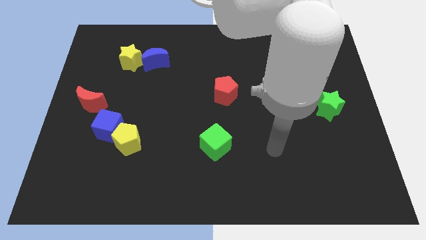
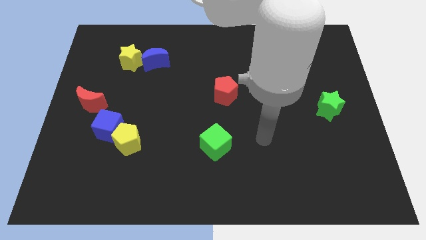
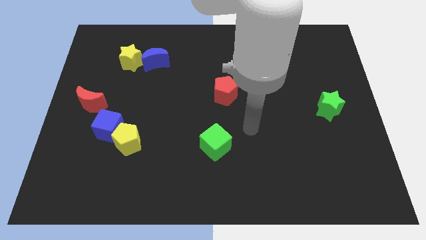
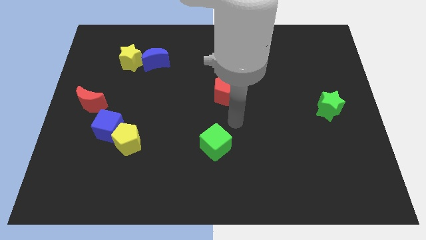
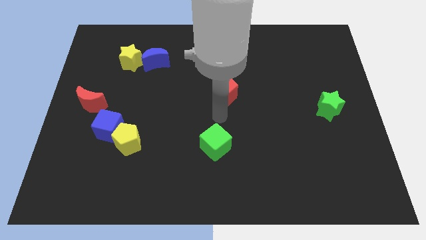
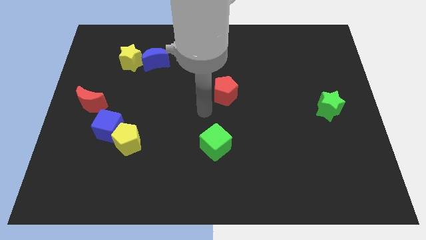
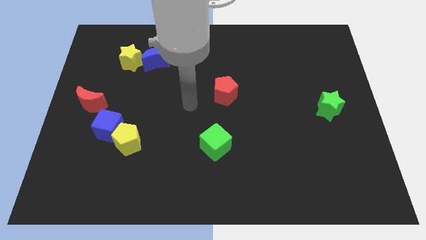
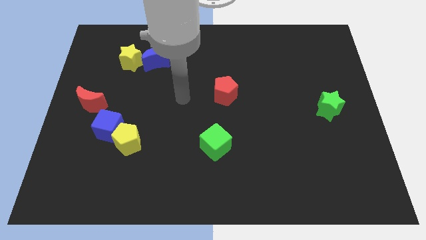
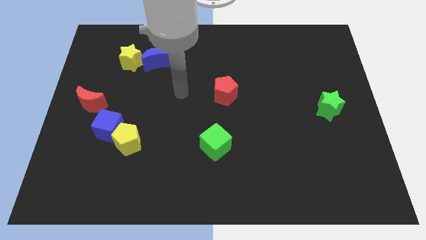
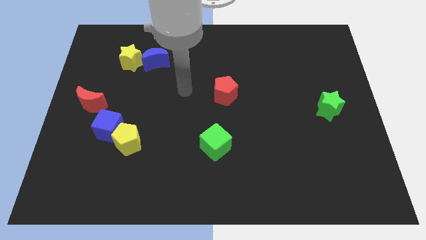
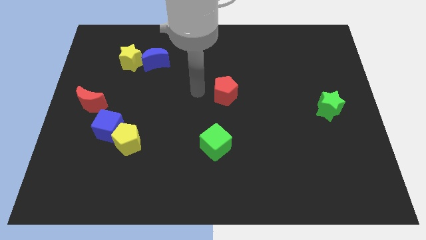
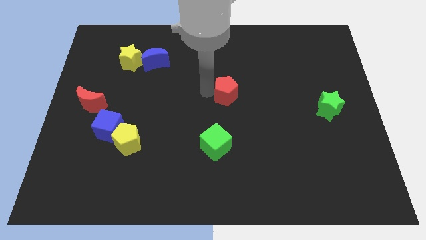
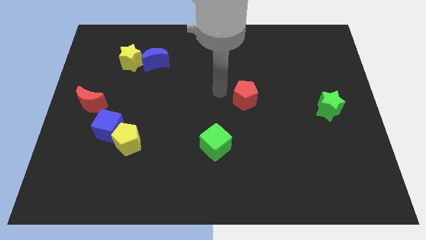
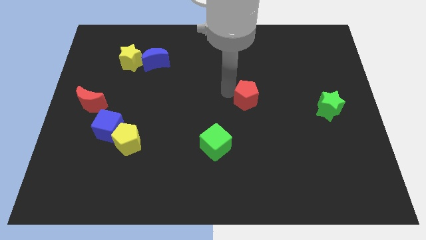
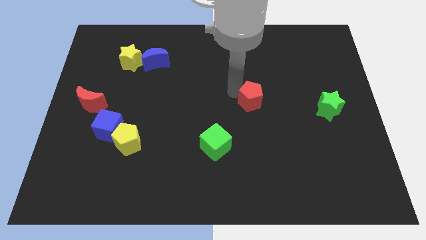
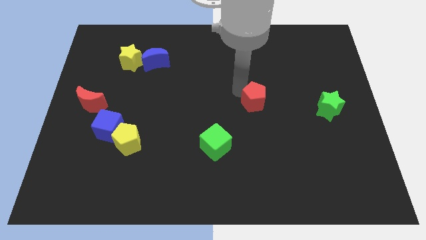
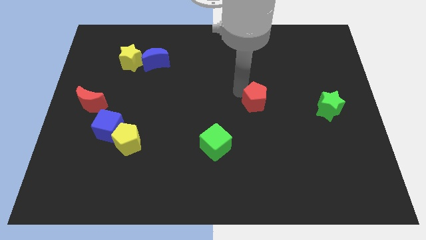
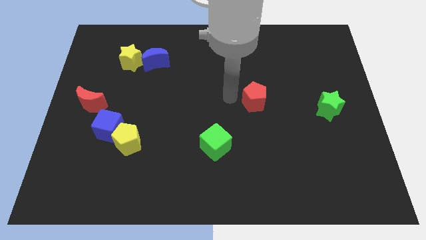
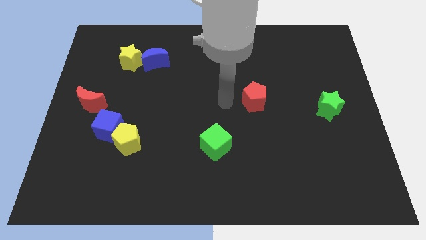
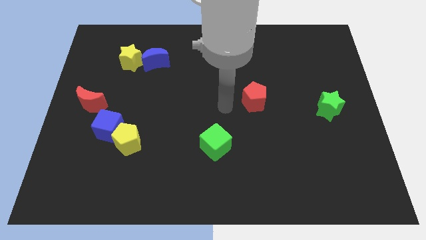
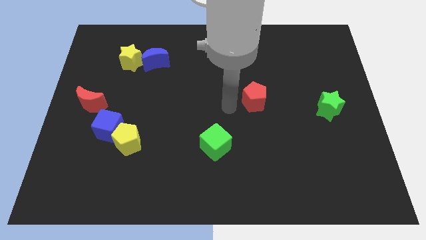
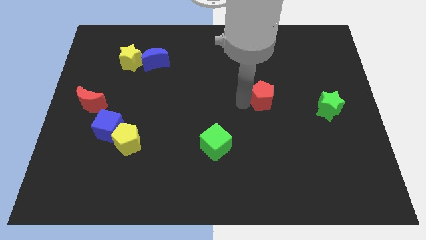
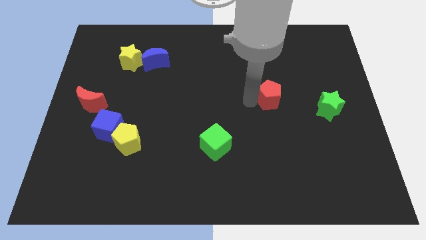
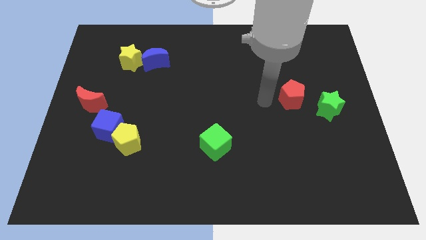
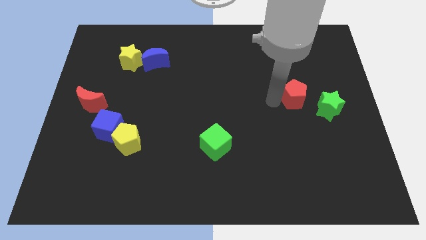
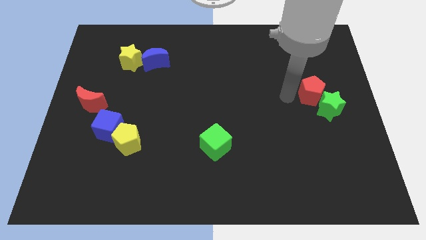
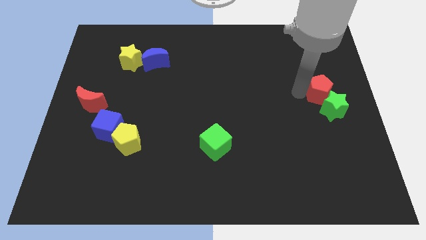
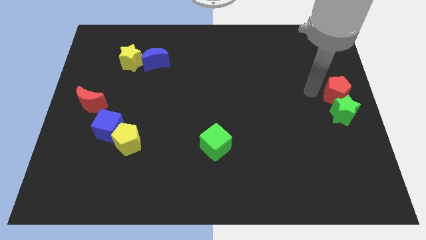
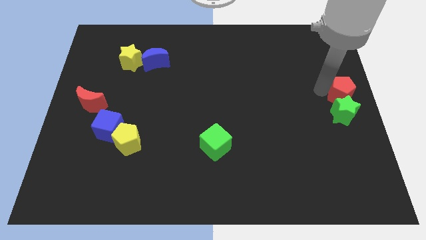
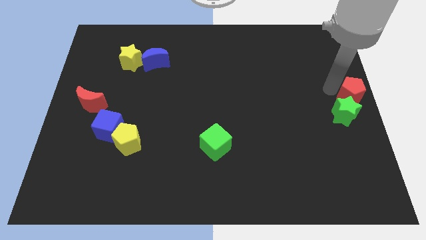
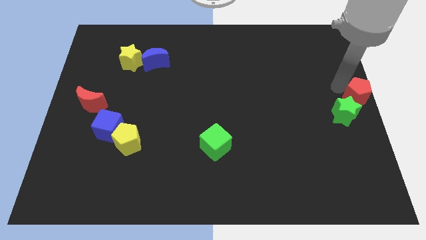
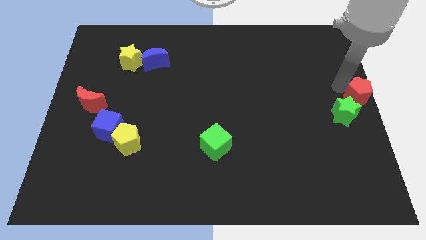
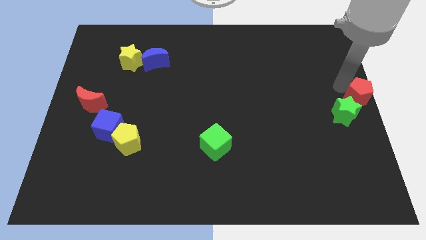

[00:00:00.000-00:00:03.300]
place red pentagon to the right center of board

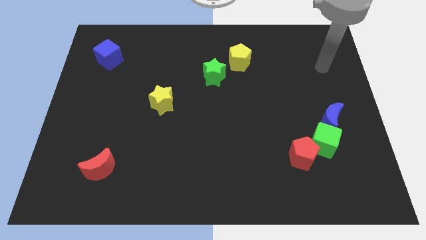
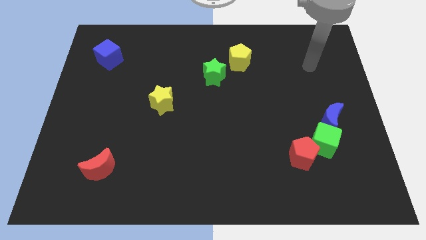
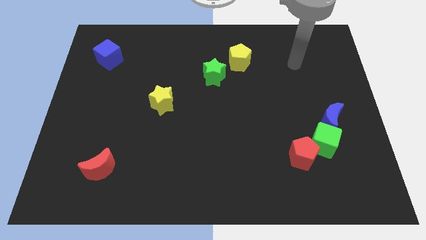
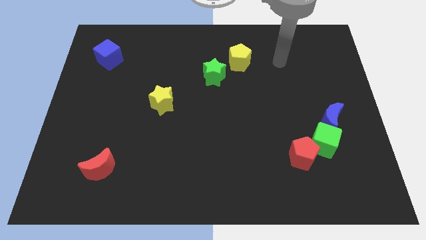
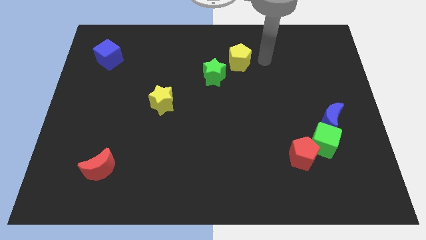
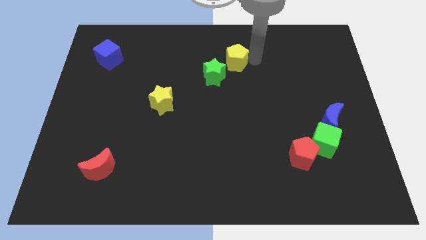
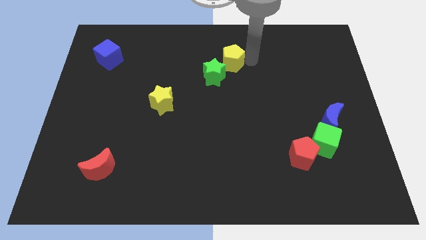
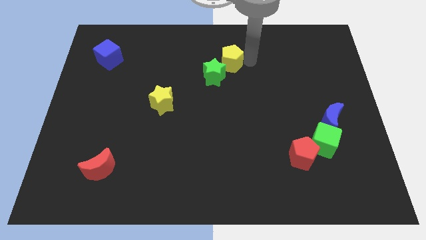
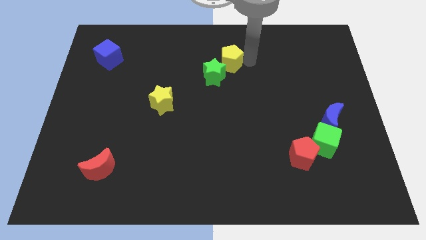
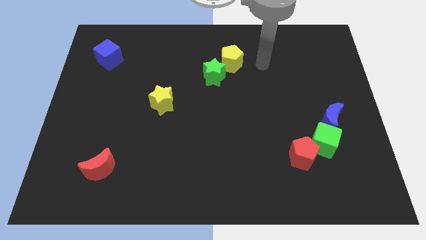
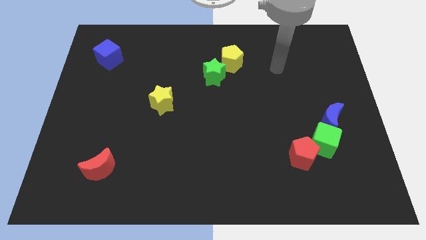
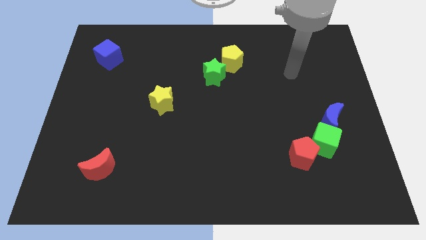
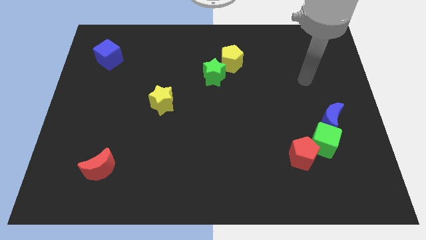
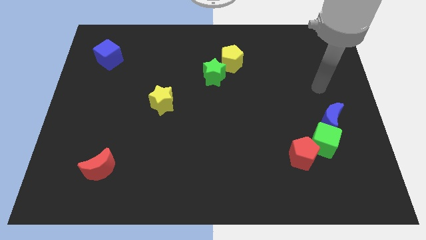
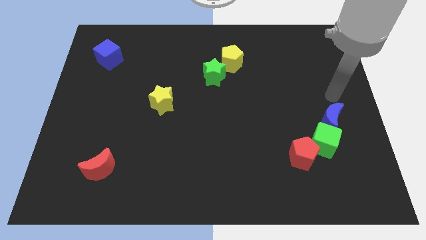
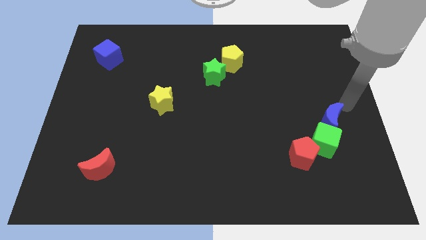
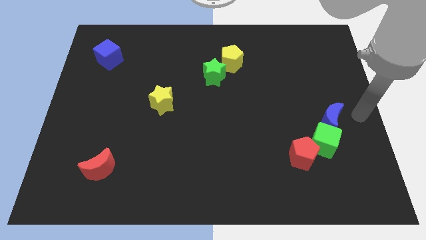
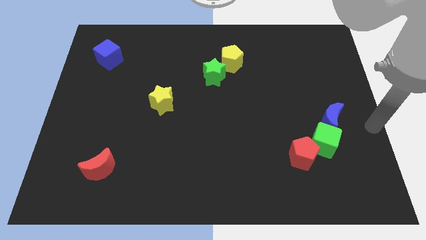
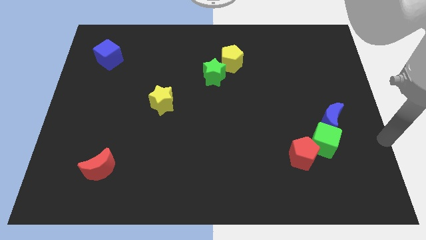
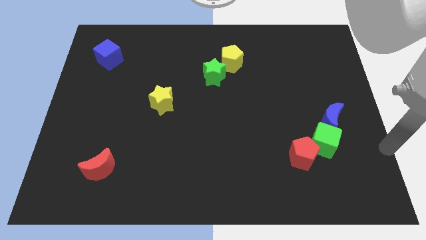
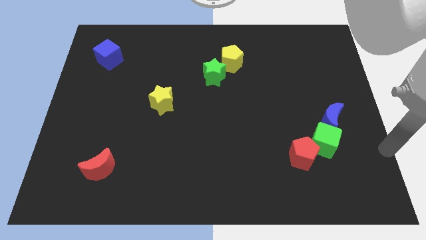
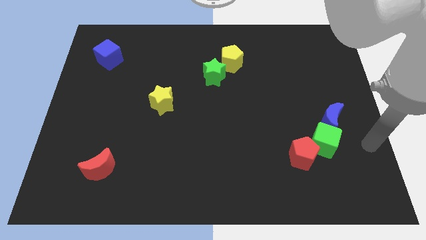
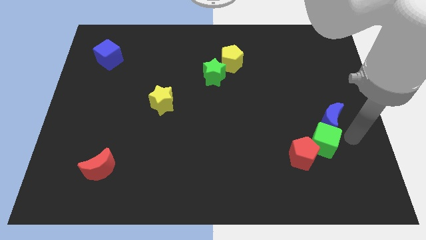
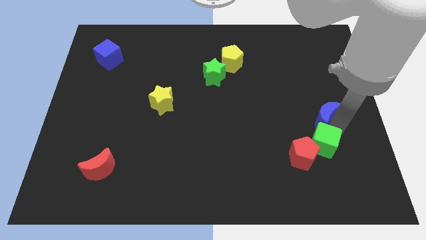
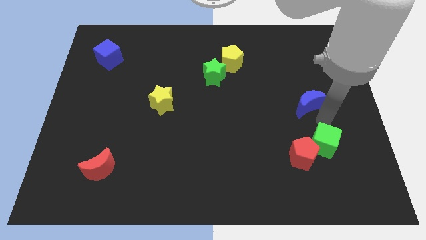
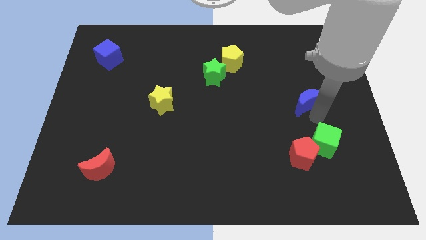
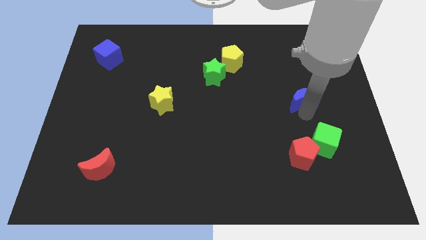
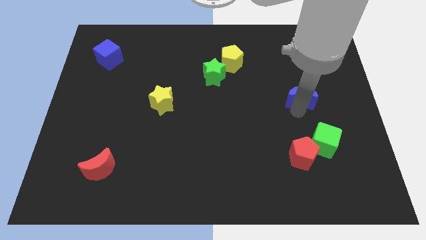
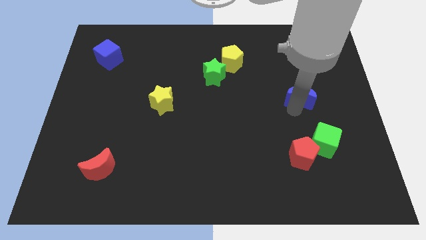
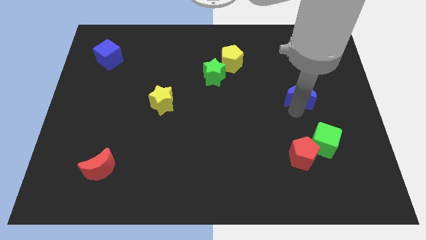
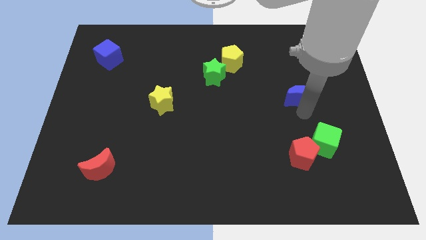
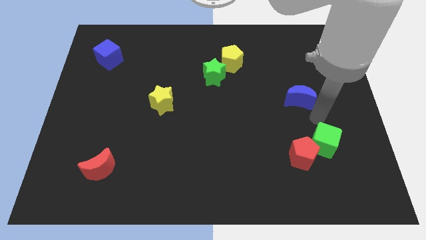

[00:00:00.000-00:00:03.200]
move your arm from yellow pentagon to blue moon

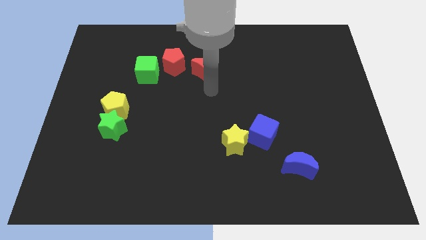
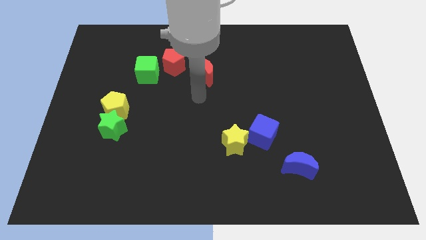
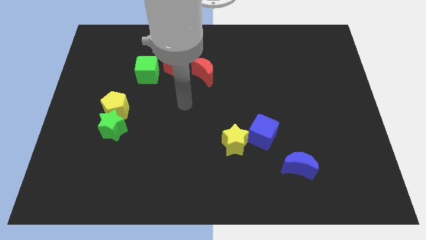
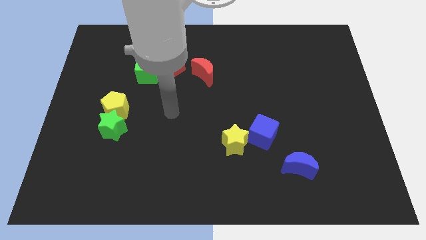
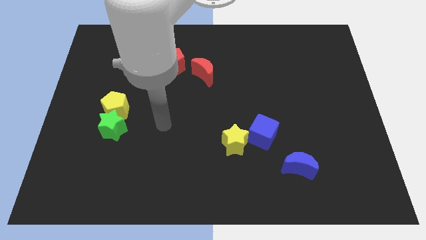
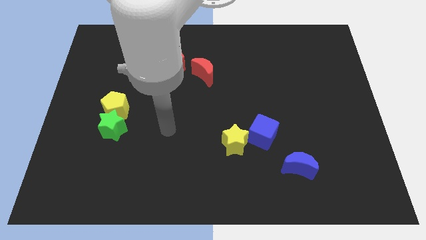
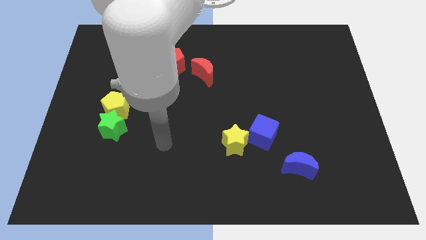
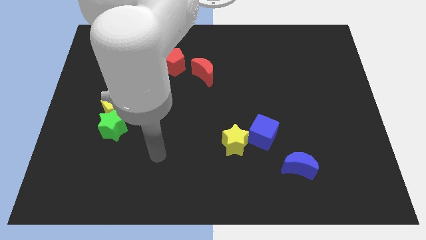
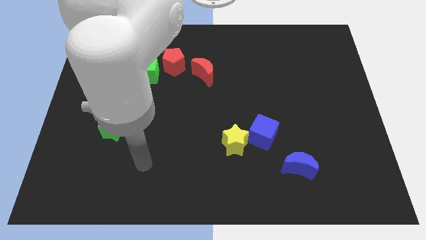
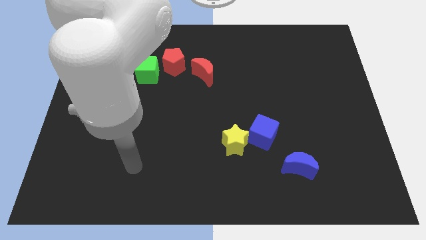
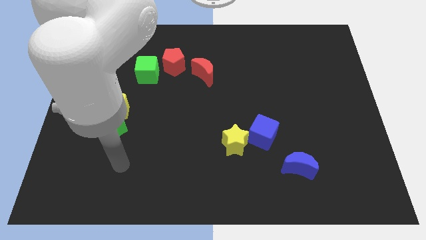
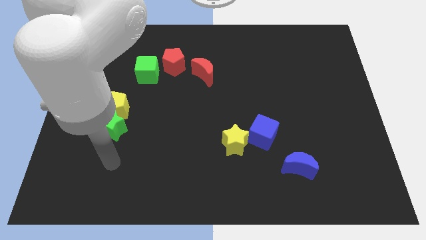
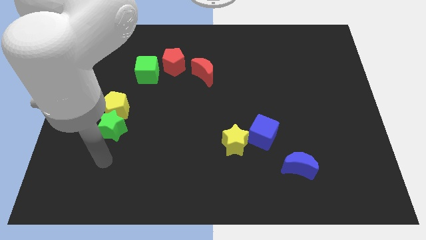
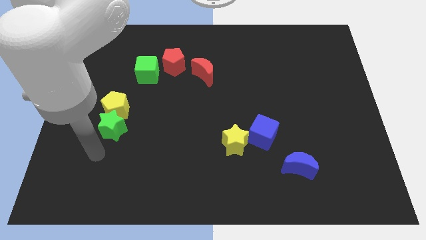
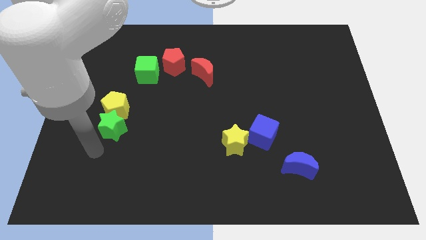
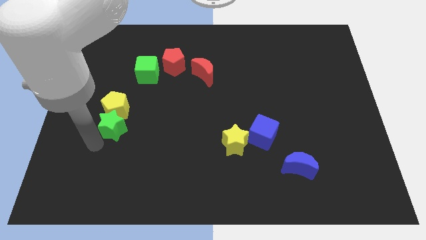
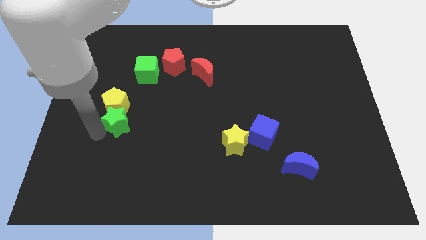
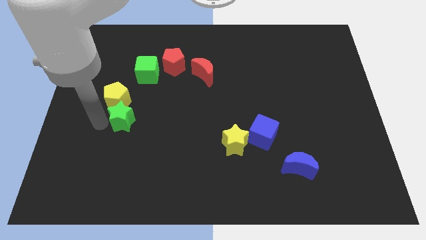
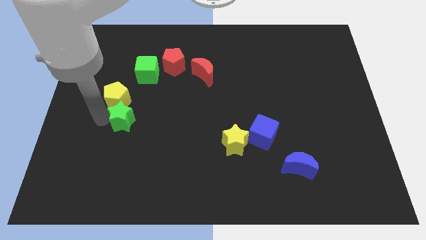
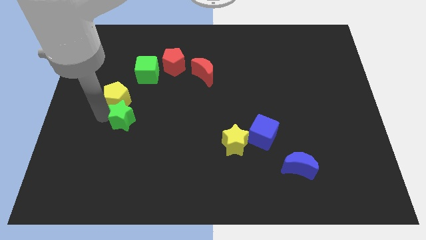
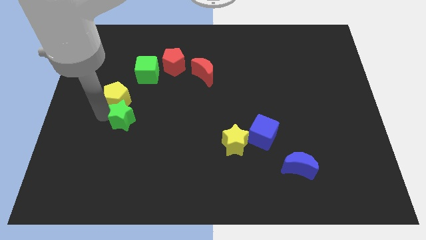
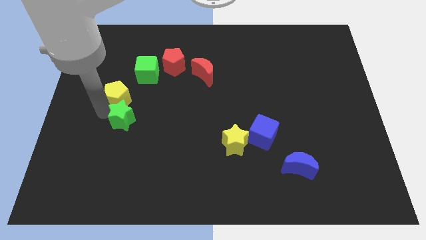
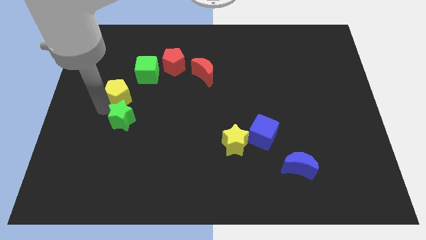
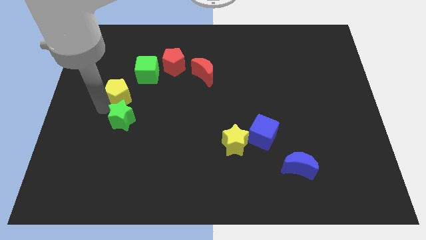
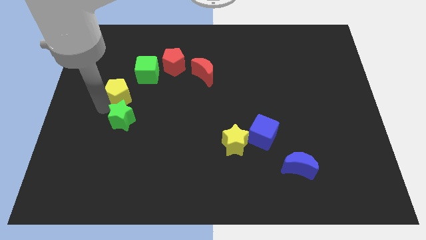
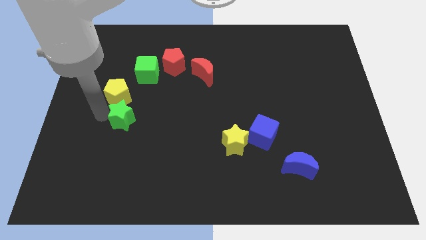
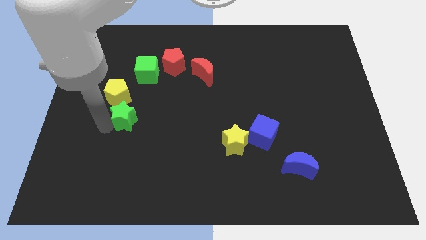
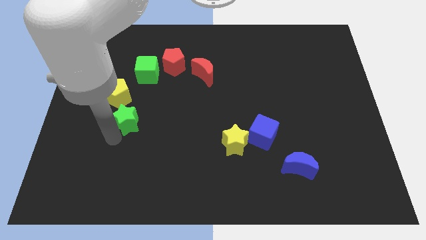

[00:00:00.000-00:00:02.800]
push the yellow pentagon and the green star slightly to the top
